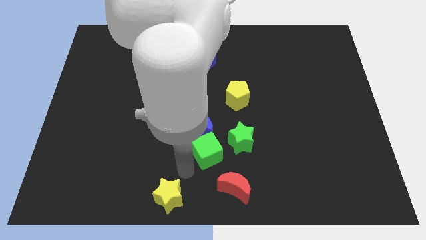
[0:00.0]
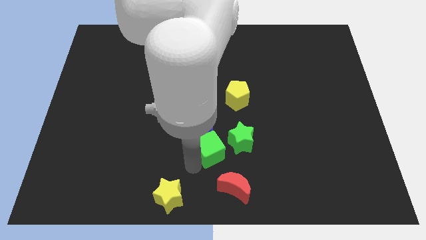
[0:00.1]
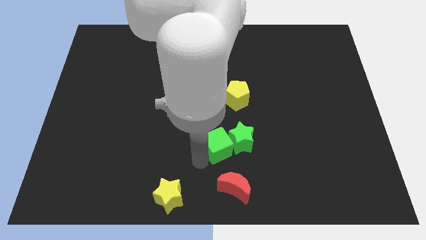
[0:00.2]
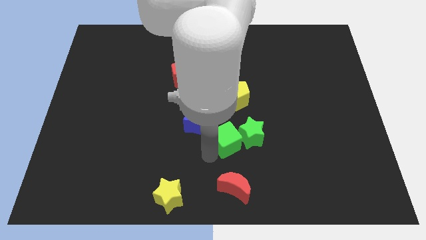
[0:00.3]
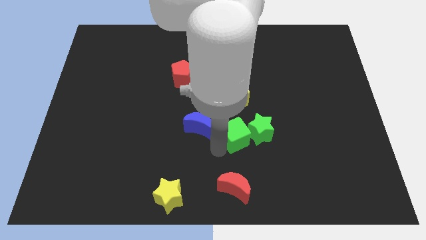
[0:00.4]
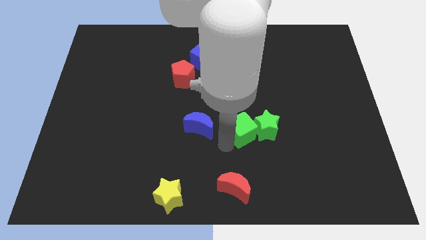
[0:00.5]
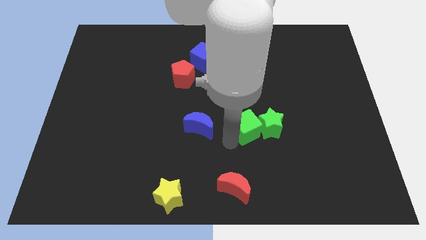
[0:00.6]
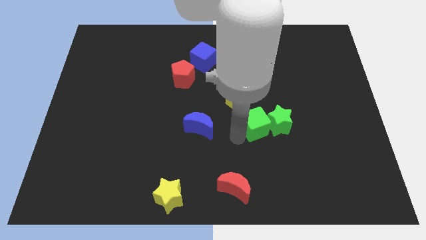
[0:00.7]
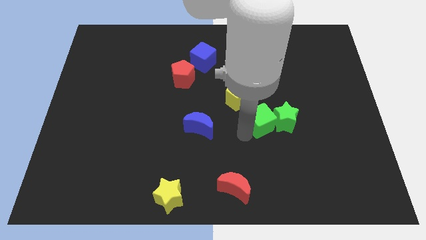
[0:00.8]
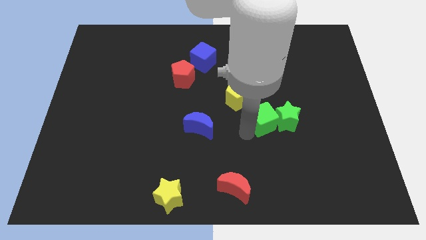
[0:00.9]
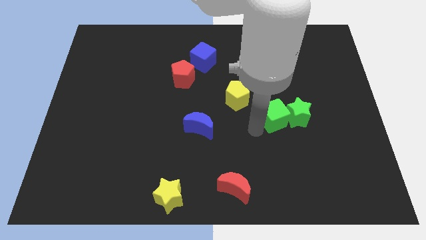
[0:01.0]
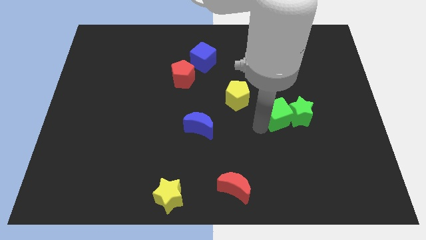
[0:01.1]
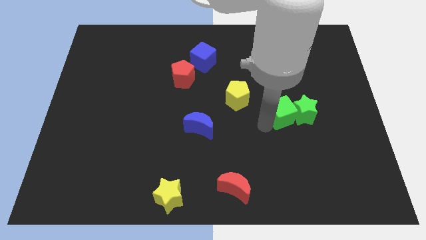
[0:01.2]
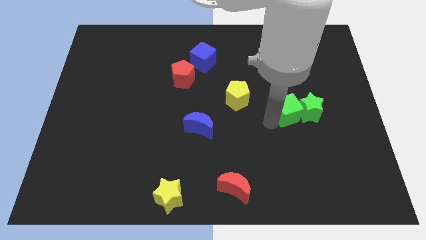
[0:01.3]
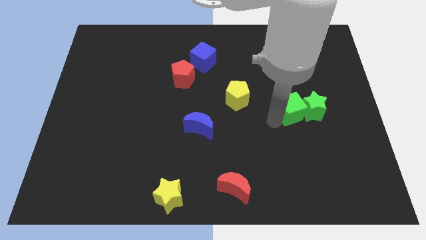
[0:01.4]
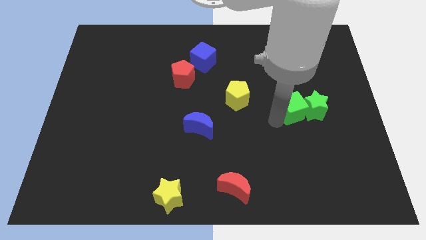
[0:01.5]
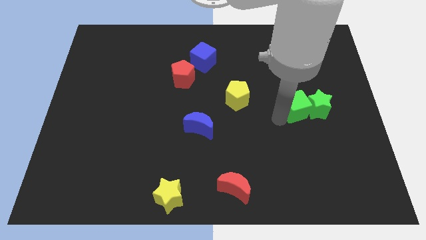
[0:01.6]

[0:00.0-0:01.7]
push the green cube and green star to the right side of the board

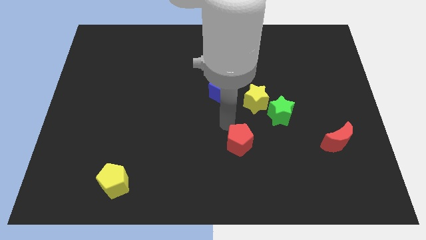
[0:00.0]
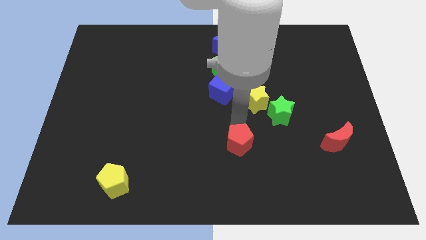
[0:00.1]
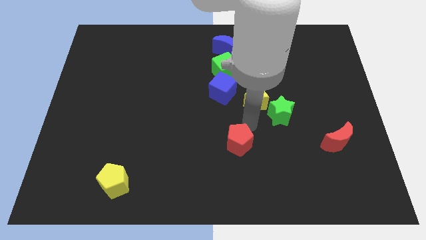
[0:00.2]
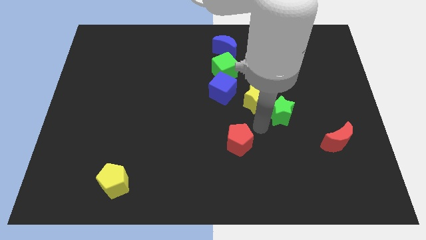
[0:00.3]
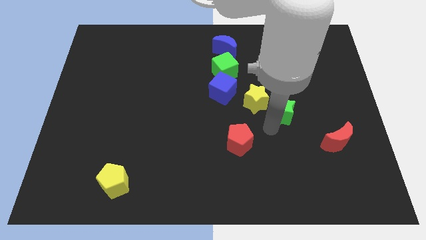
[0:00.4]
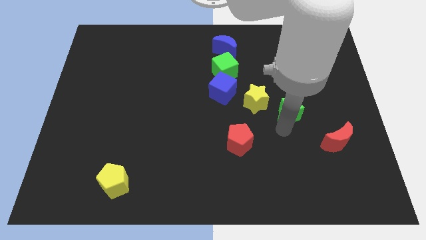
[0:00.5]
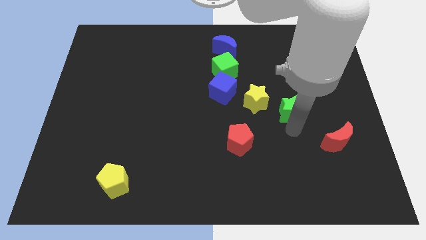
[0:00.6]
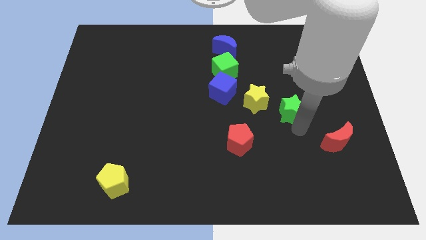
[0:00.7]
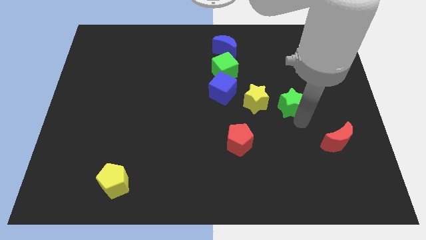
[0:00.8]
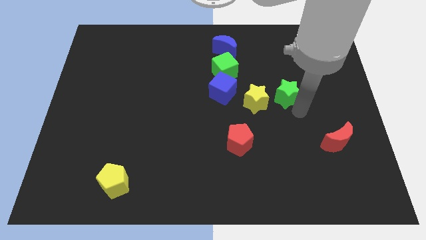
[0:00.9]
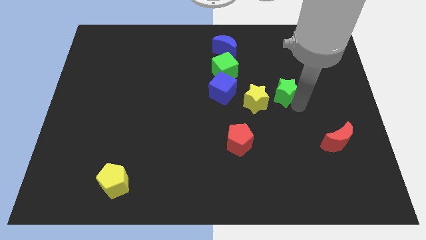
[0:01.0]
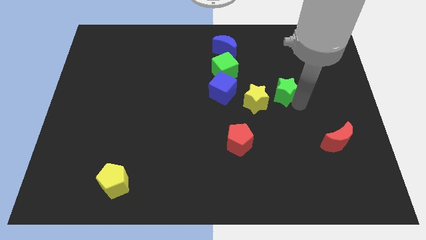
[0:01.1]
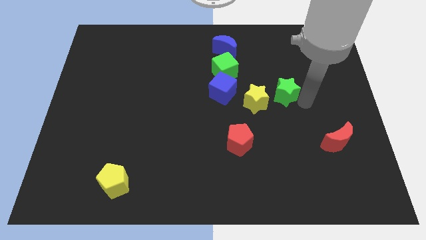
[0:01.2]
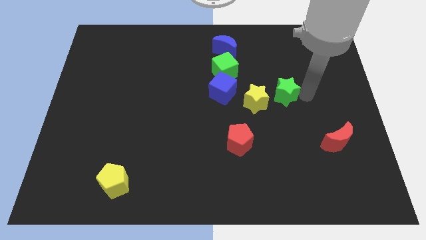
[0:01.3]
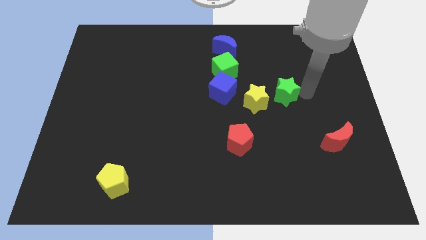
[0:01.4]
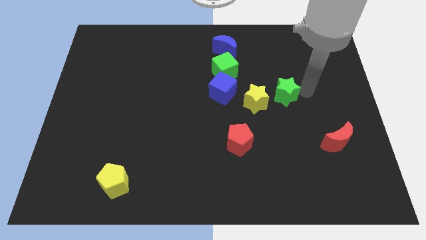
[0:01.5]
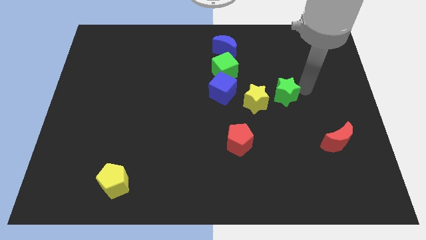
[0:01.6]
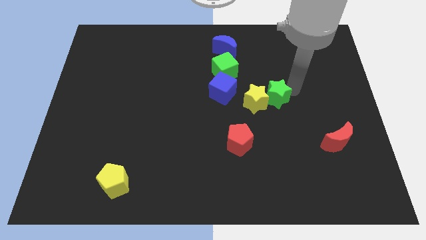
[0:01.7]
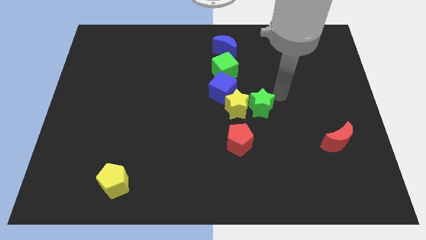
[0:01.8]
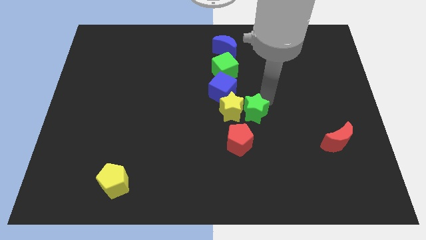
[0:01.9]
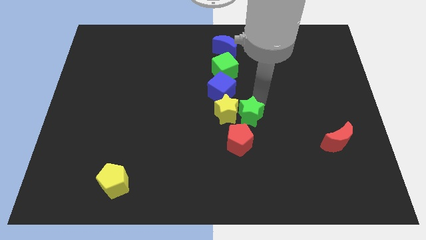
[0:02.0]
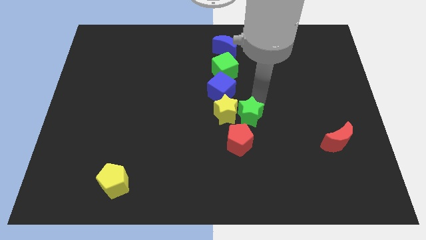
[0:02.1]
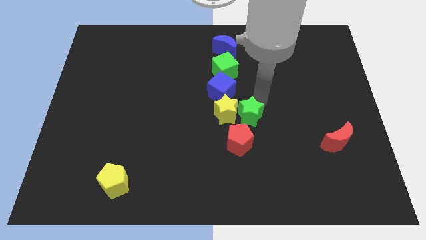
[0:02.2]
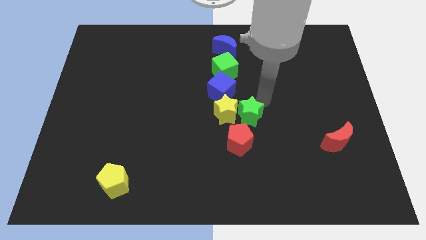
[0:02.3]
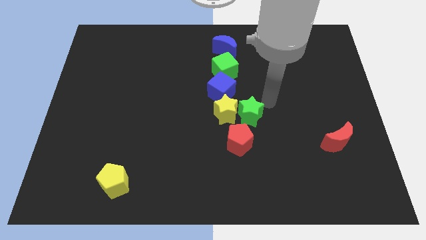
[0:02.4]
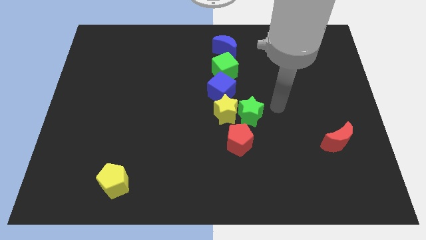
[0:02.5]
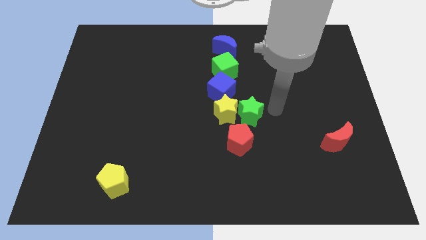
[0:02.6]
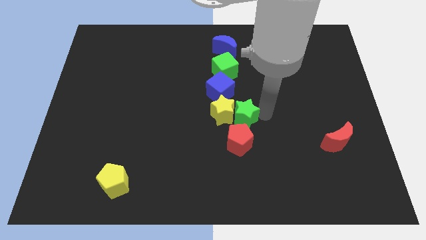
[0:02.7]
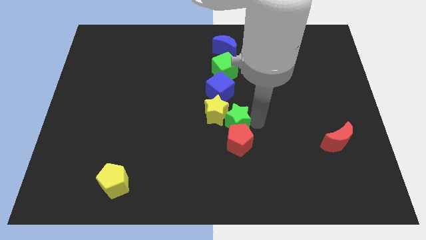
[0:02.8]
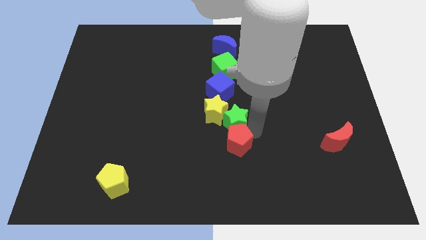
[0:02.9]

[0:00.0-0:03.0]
place yellow star along with green star below blue cube

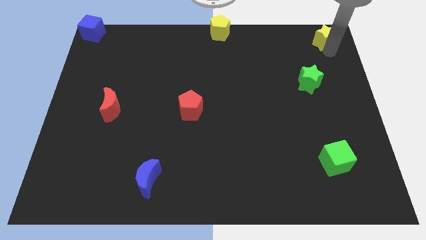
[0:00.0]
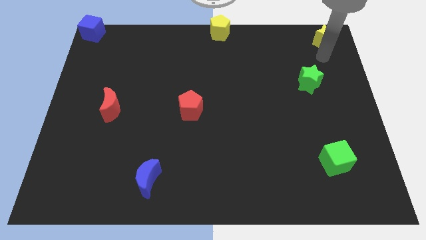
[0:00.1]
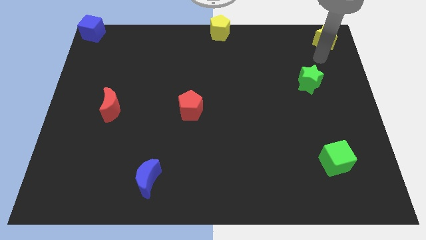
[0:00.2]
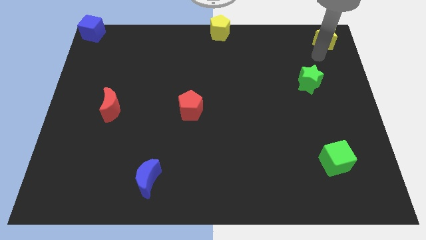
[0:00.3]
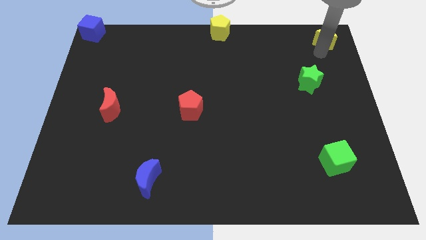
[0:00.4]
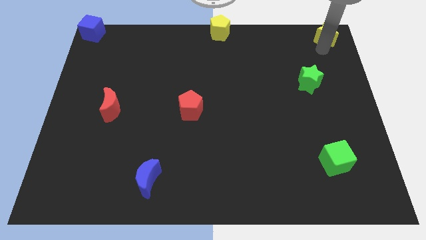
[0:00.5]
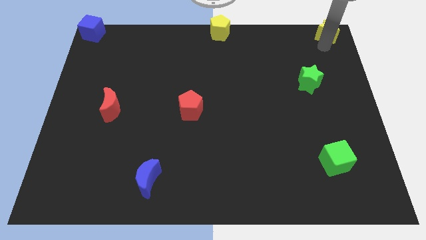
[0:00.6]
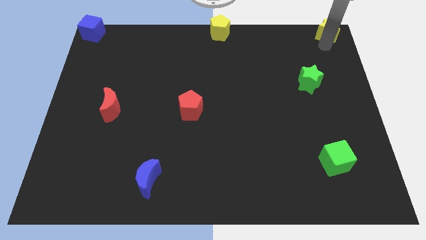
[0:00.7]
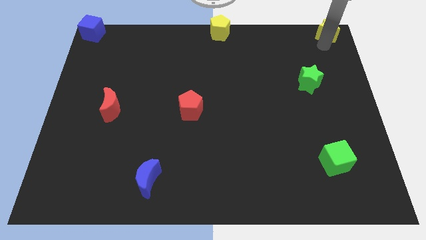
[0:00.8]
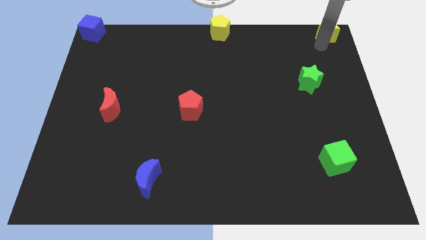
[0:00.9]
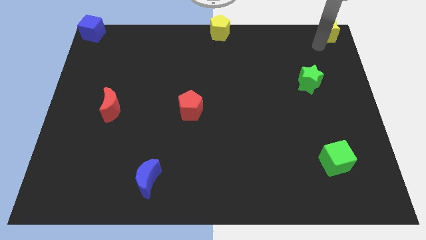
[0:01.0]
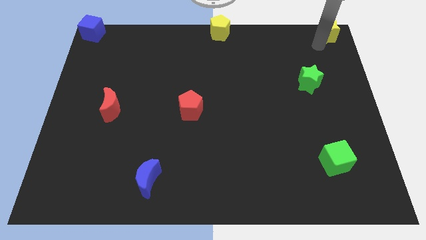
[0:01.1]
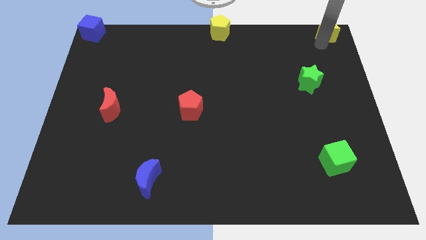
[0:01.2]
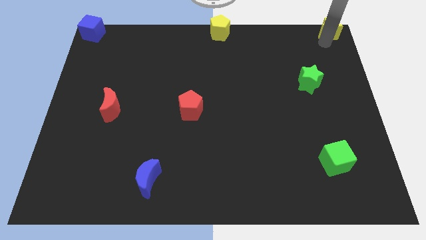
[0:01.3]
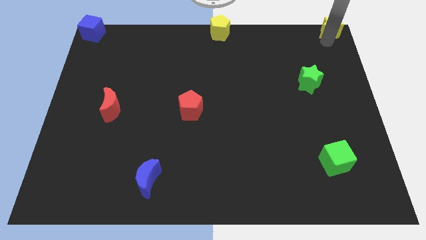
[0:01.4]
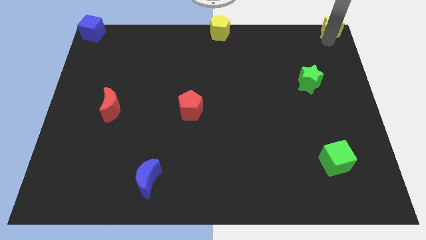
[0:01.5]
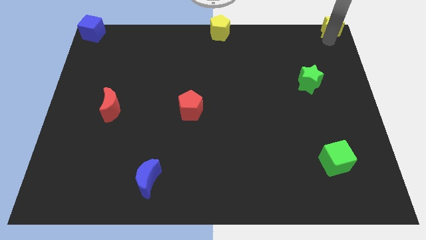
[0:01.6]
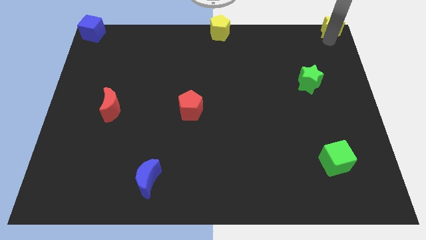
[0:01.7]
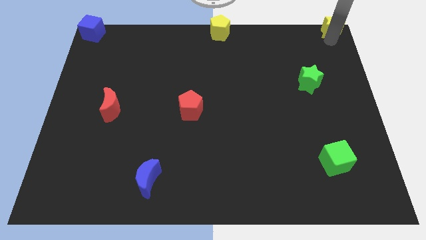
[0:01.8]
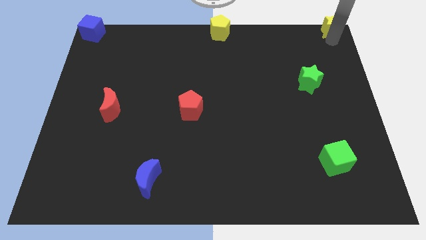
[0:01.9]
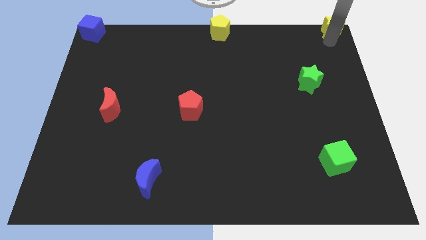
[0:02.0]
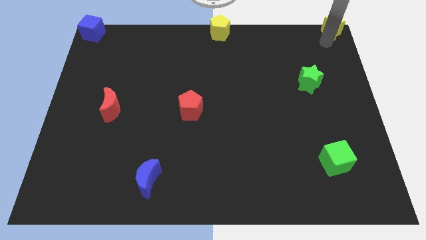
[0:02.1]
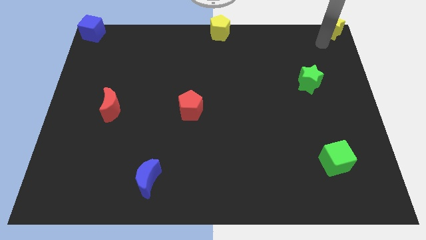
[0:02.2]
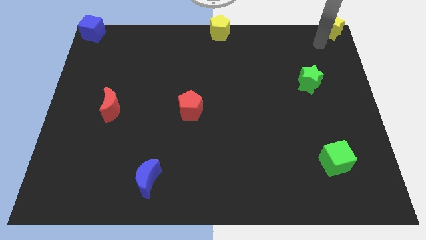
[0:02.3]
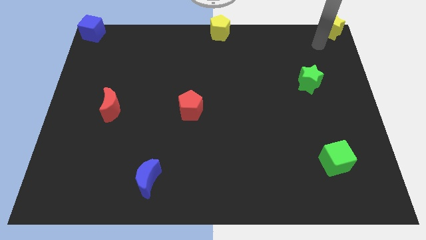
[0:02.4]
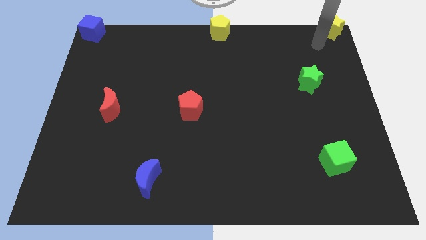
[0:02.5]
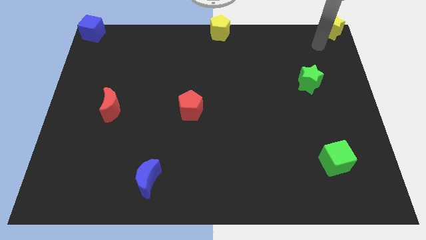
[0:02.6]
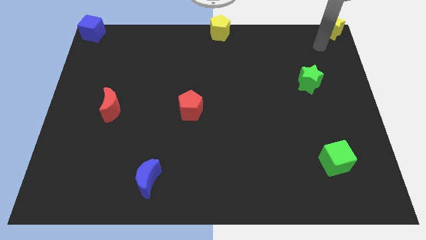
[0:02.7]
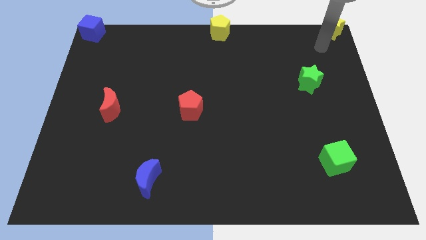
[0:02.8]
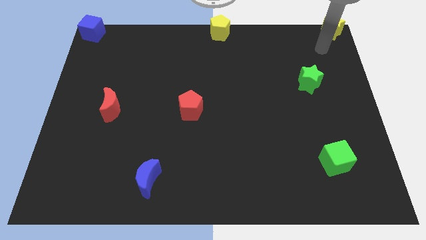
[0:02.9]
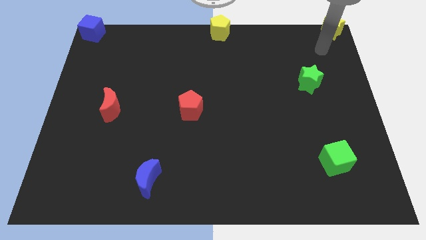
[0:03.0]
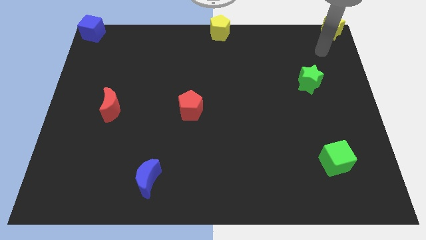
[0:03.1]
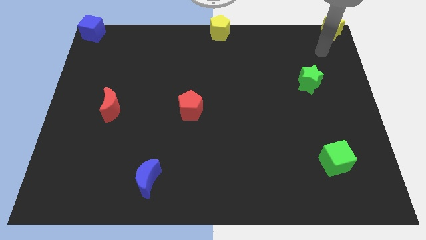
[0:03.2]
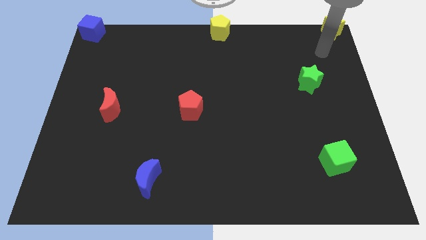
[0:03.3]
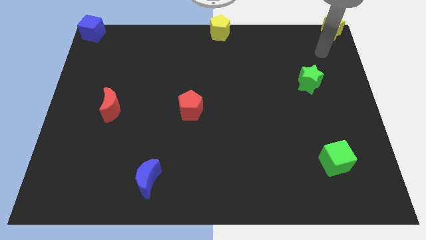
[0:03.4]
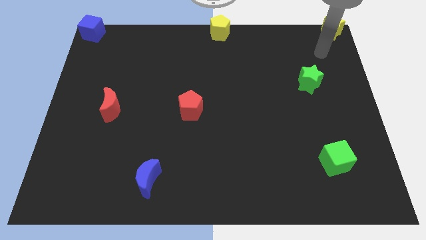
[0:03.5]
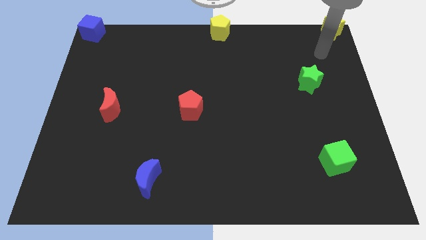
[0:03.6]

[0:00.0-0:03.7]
move yellow star towards top right corner of the board

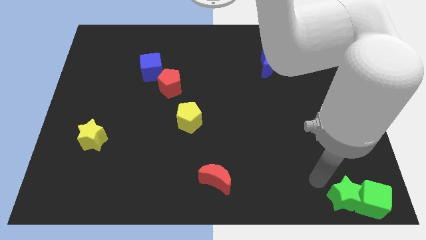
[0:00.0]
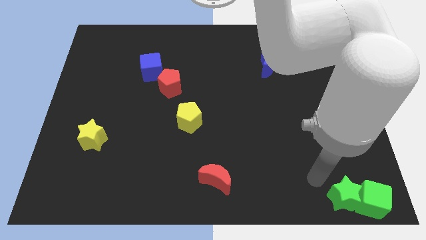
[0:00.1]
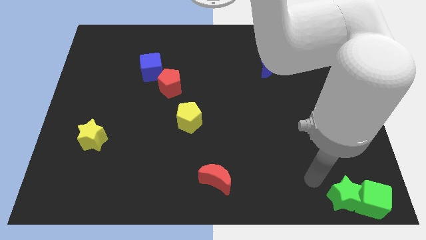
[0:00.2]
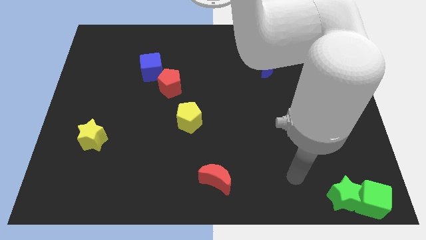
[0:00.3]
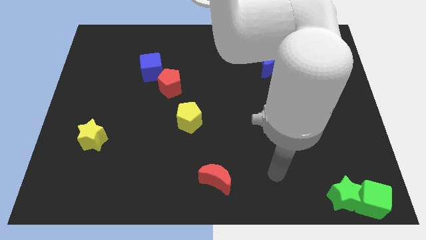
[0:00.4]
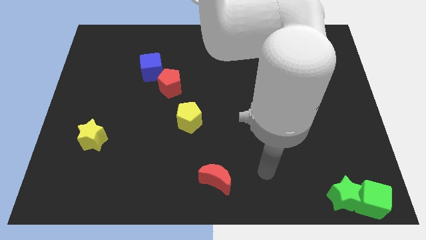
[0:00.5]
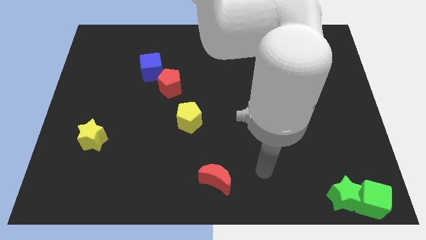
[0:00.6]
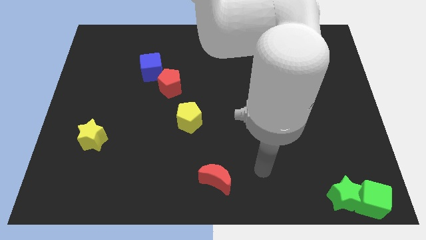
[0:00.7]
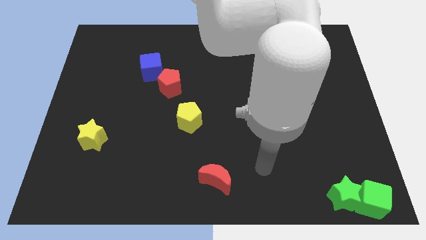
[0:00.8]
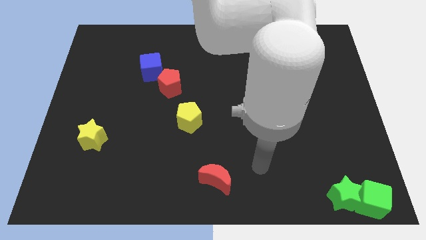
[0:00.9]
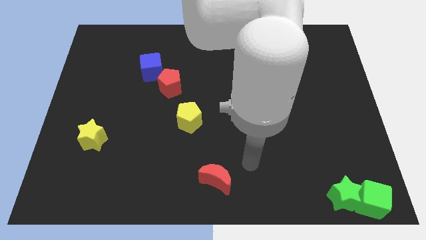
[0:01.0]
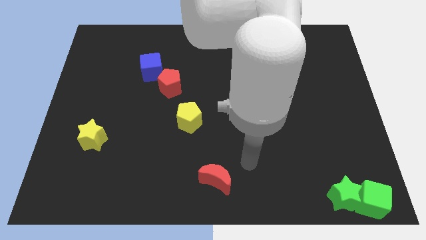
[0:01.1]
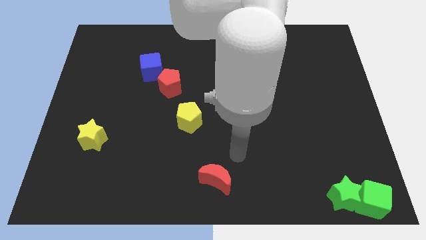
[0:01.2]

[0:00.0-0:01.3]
place your arm at the top right side of red moon
